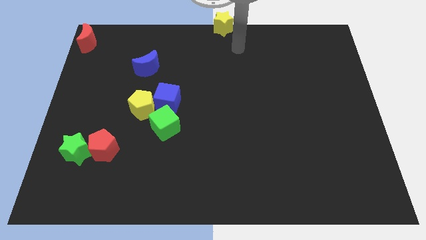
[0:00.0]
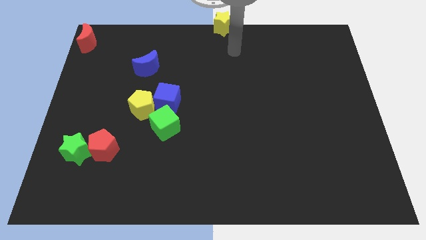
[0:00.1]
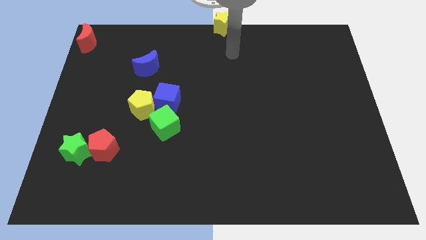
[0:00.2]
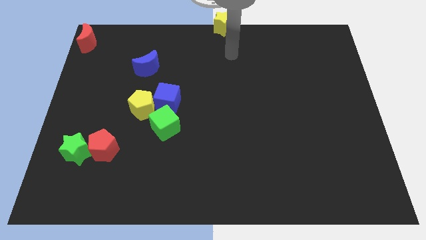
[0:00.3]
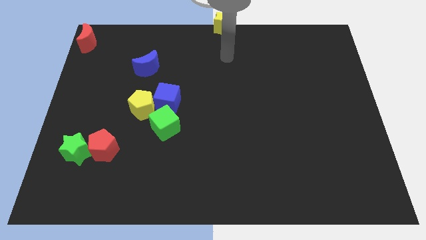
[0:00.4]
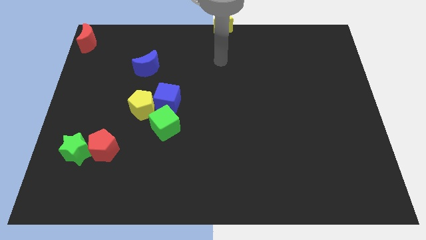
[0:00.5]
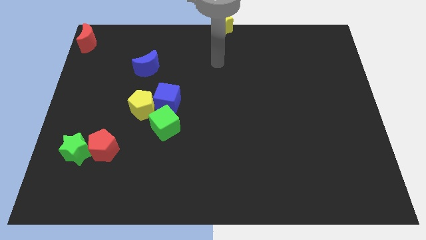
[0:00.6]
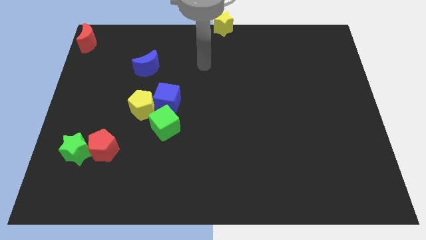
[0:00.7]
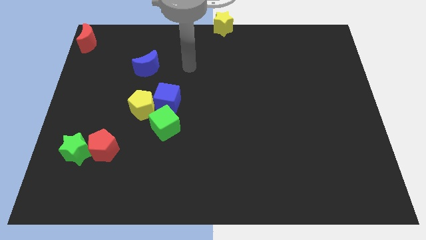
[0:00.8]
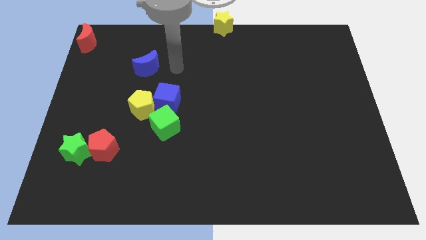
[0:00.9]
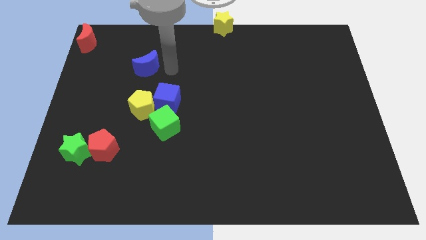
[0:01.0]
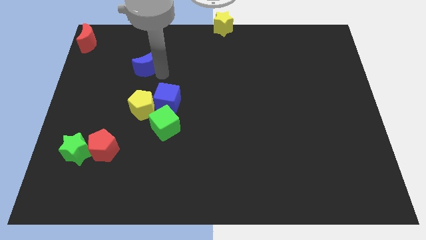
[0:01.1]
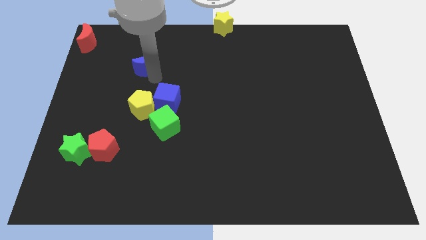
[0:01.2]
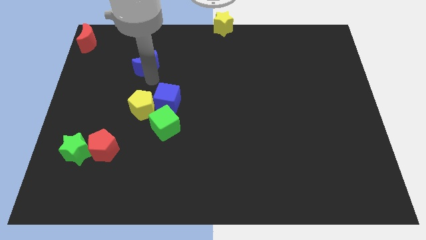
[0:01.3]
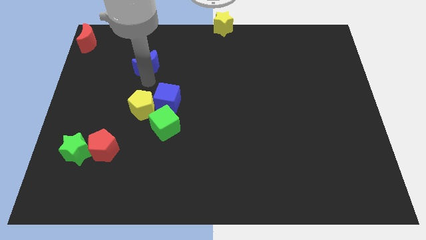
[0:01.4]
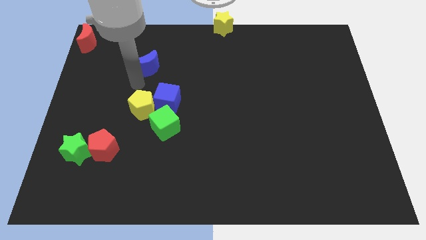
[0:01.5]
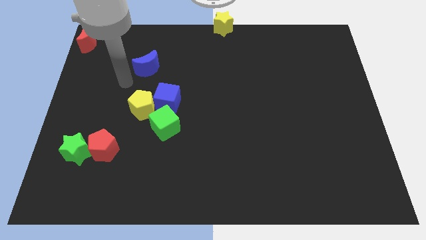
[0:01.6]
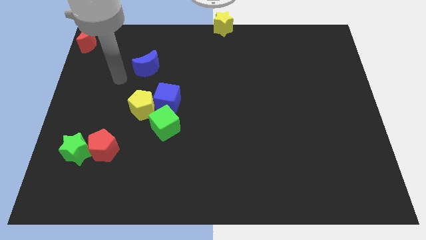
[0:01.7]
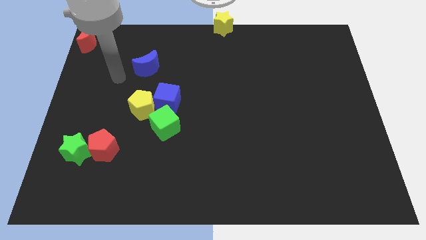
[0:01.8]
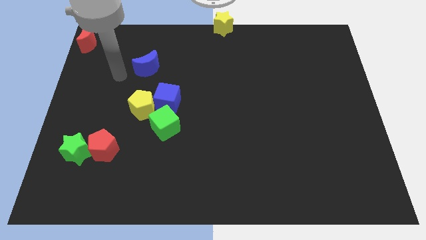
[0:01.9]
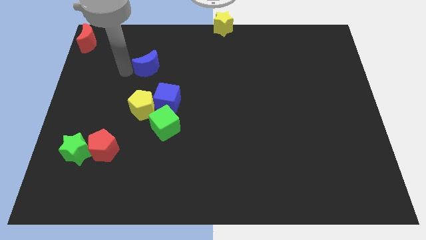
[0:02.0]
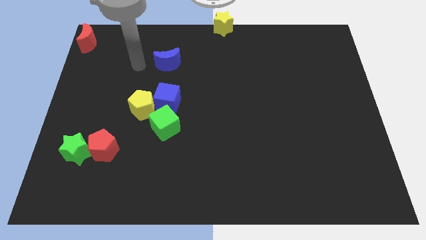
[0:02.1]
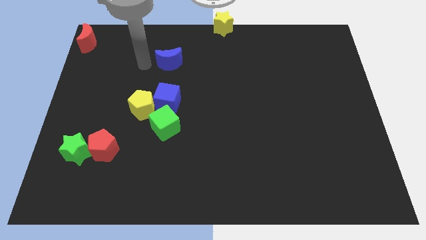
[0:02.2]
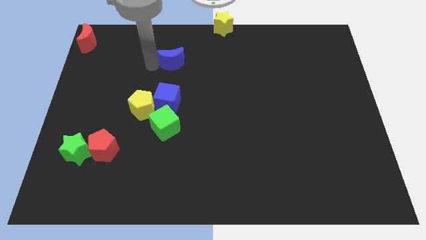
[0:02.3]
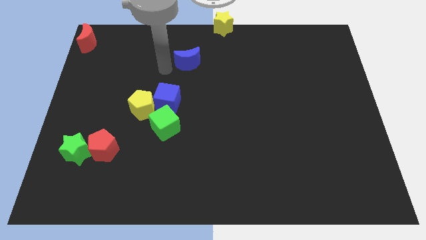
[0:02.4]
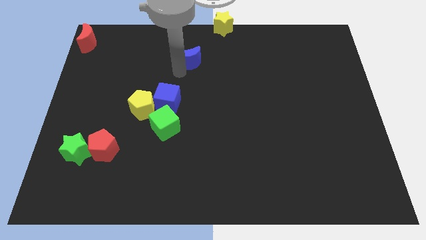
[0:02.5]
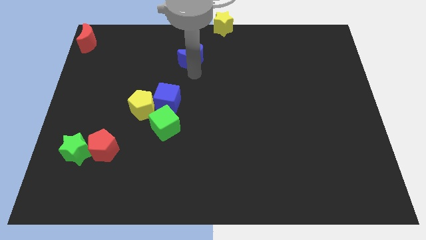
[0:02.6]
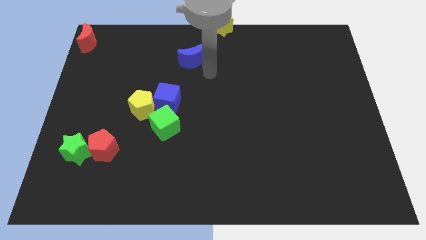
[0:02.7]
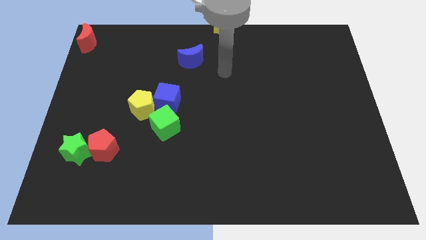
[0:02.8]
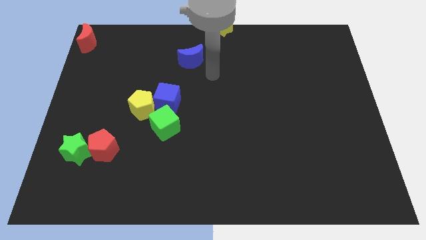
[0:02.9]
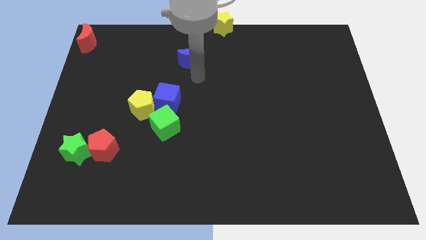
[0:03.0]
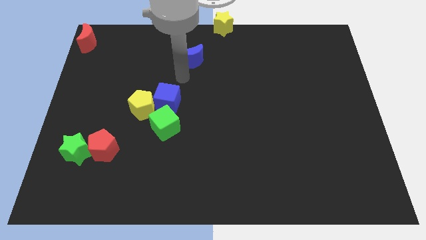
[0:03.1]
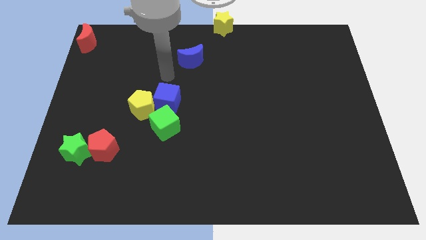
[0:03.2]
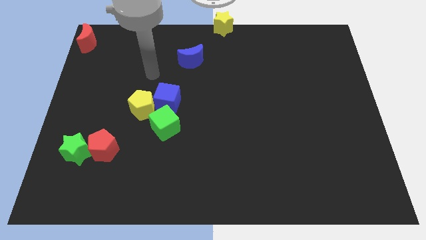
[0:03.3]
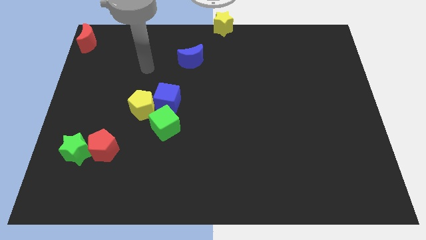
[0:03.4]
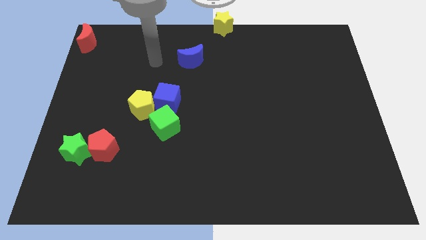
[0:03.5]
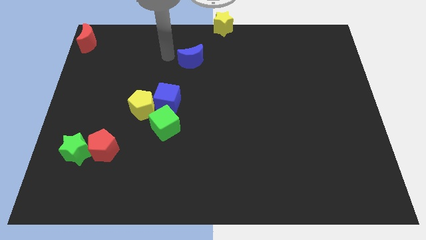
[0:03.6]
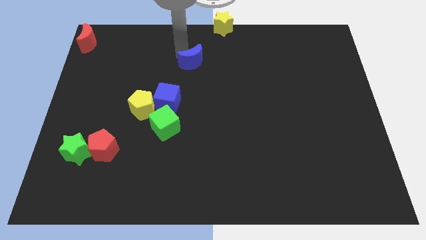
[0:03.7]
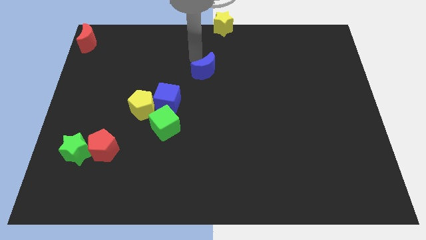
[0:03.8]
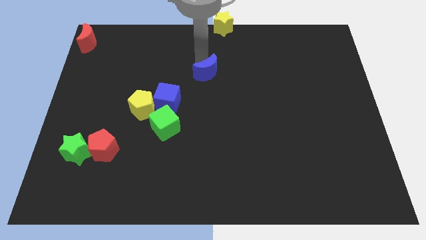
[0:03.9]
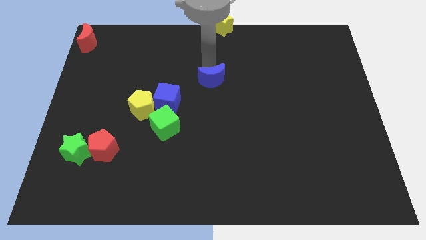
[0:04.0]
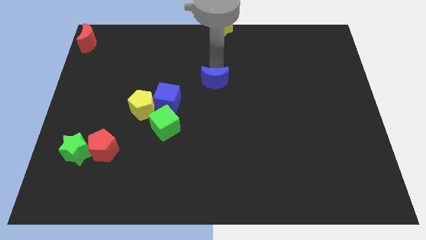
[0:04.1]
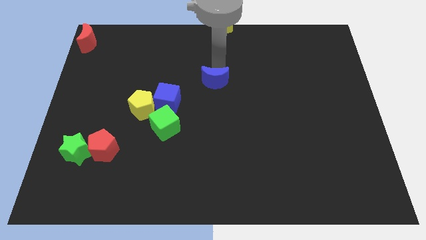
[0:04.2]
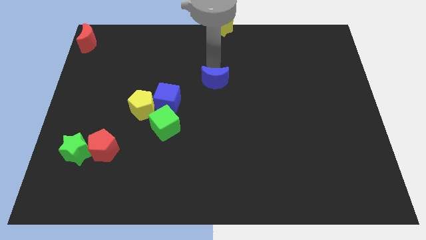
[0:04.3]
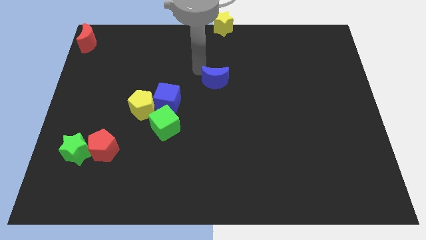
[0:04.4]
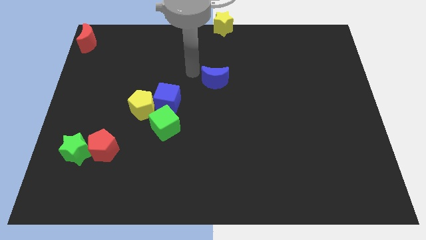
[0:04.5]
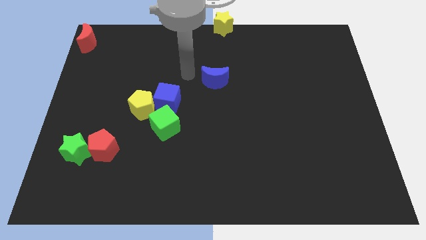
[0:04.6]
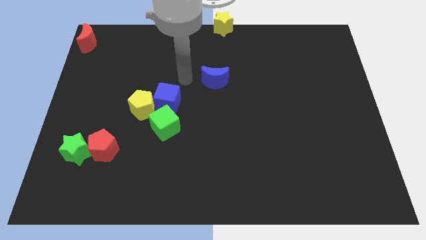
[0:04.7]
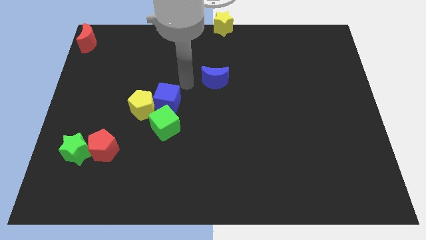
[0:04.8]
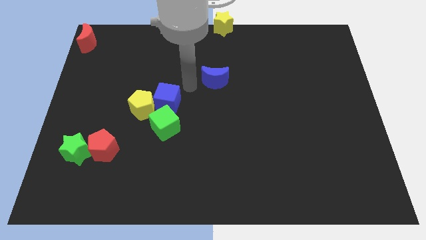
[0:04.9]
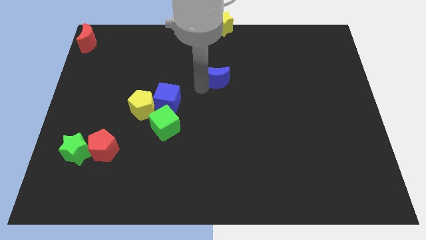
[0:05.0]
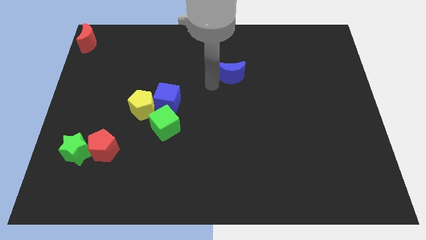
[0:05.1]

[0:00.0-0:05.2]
place the blue moon below the yellow star

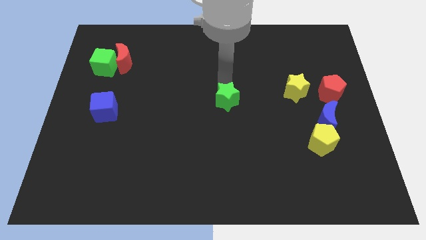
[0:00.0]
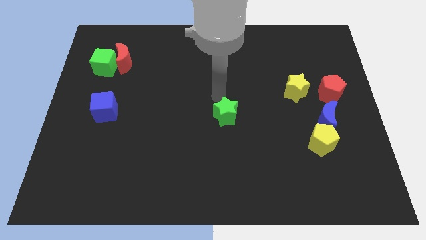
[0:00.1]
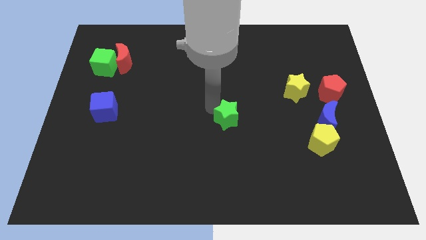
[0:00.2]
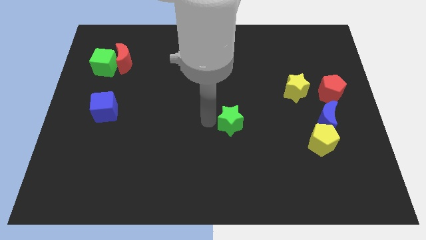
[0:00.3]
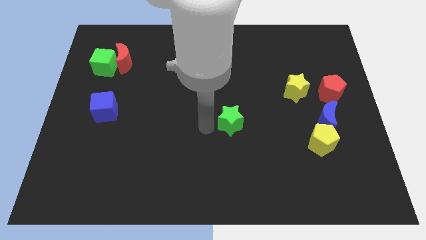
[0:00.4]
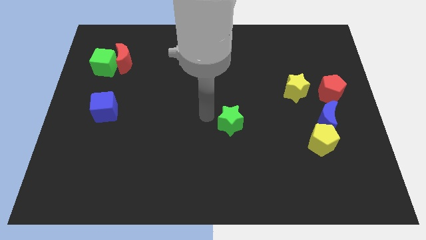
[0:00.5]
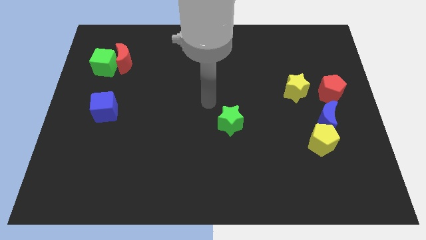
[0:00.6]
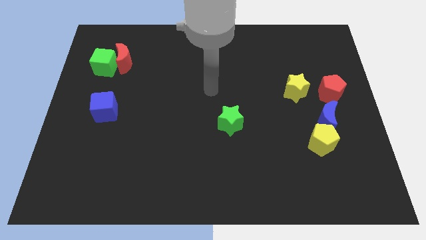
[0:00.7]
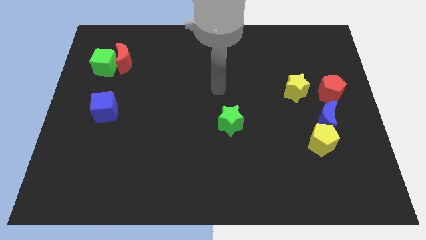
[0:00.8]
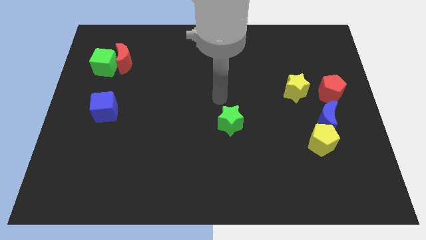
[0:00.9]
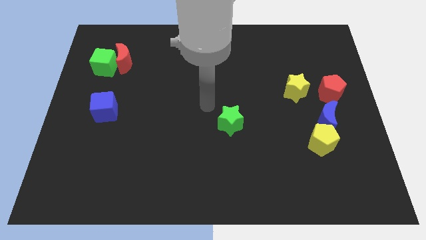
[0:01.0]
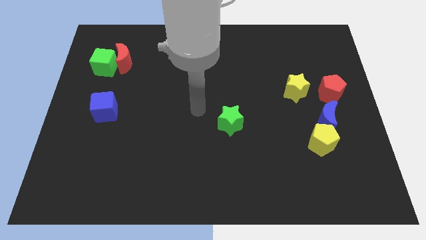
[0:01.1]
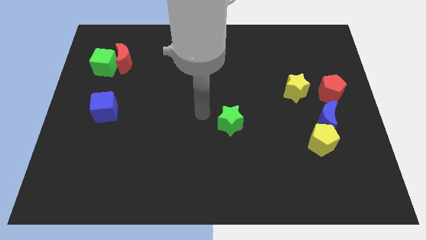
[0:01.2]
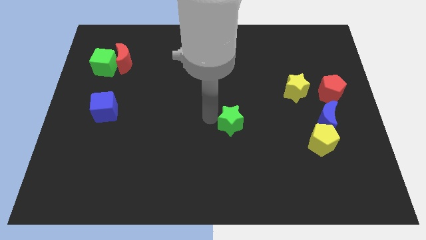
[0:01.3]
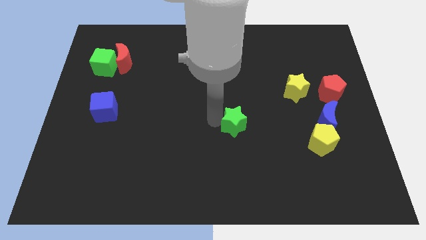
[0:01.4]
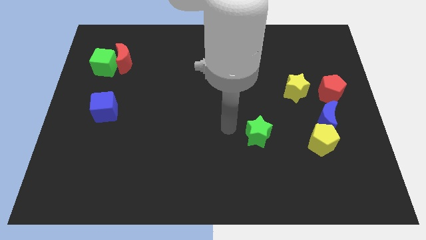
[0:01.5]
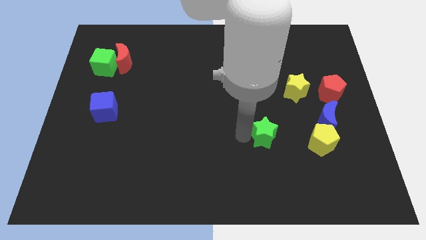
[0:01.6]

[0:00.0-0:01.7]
move the green star towards yellow pentagon

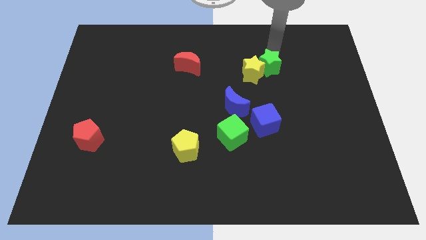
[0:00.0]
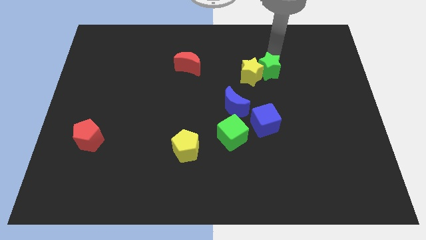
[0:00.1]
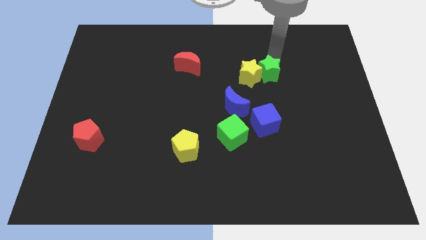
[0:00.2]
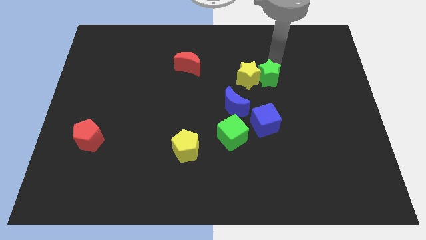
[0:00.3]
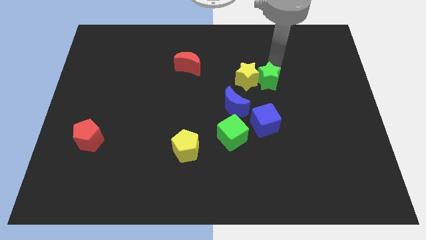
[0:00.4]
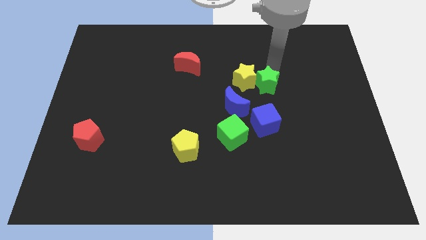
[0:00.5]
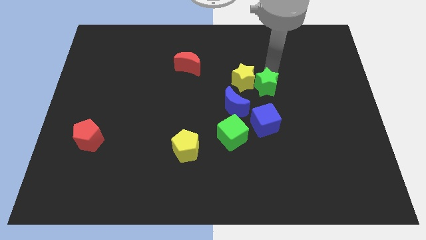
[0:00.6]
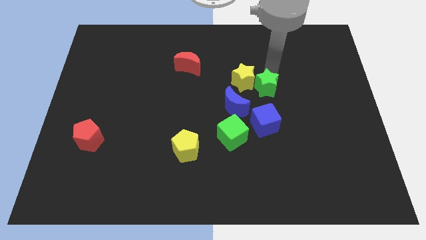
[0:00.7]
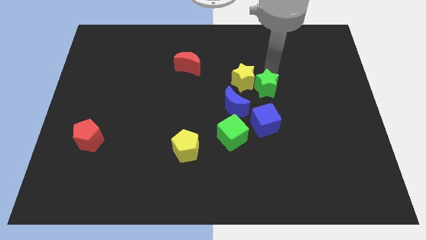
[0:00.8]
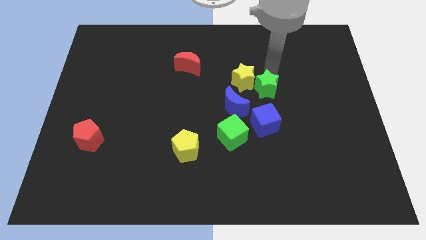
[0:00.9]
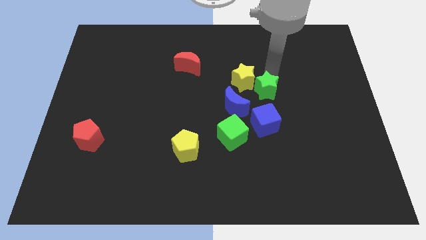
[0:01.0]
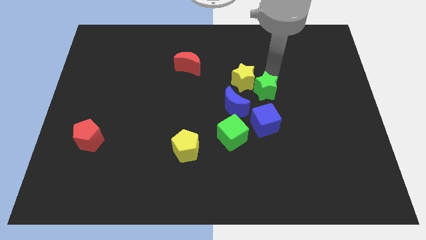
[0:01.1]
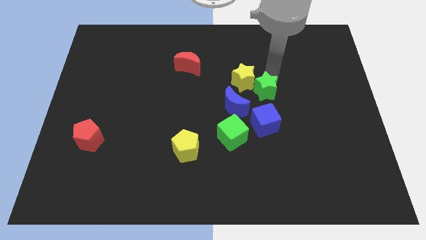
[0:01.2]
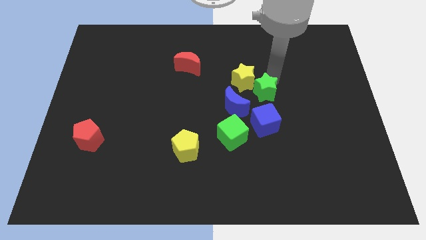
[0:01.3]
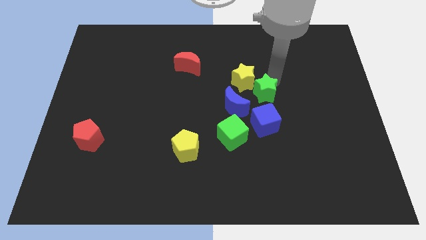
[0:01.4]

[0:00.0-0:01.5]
move the green star above the blue cube

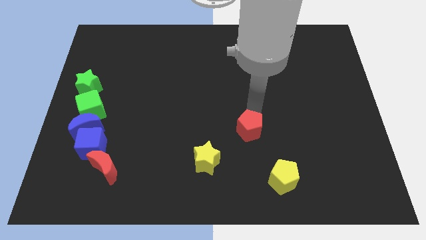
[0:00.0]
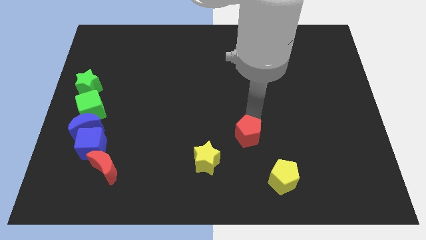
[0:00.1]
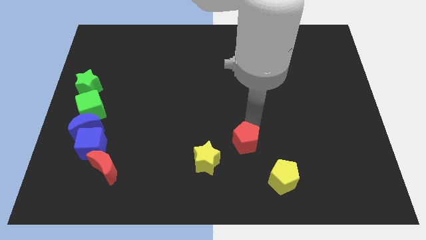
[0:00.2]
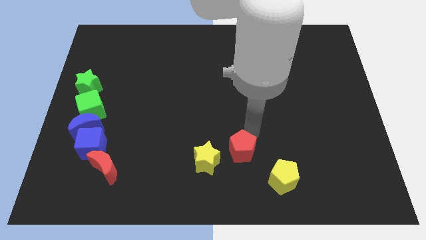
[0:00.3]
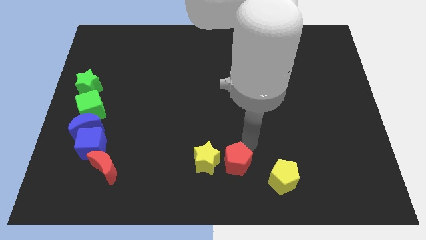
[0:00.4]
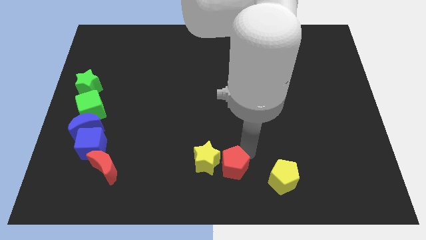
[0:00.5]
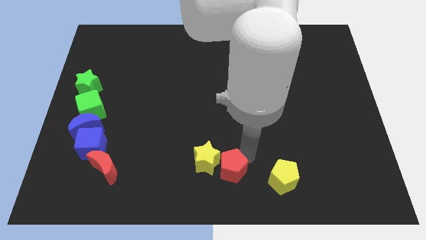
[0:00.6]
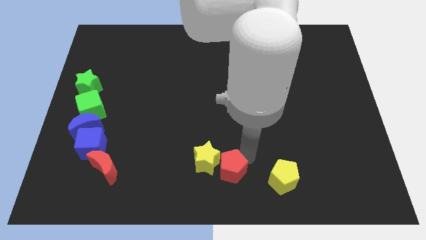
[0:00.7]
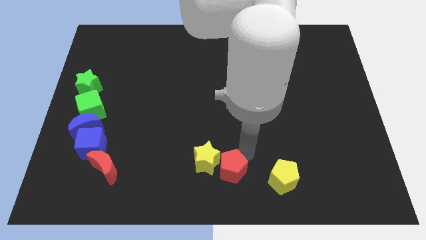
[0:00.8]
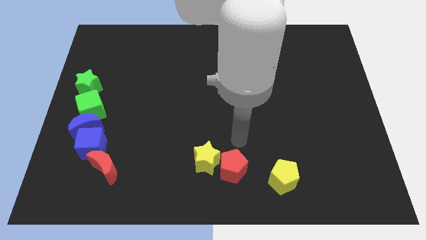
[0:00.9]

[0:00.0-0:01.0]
place the red pentagon to the right of the yellow star
